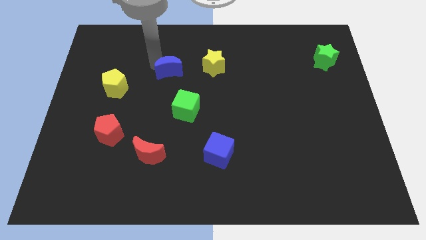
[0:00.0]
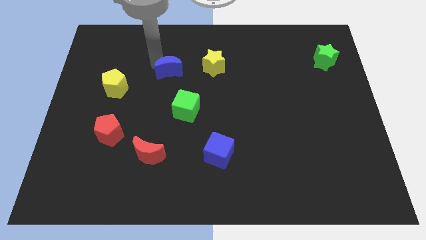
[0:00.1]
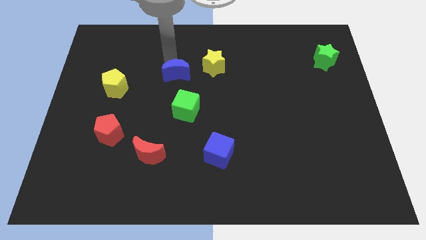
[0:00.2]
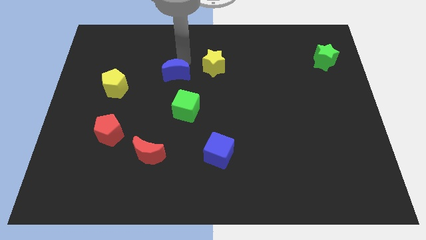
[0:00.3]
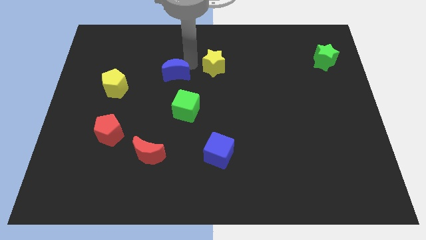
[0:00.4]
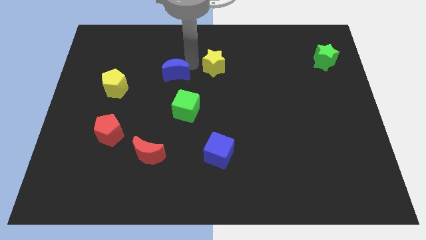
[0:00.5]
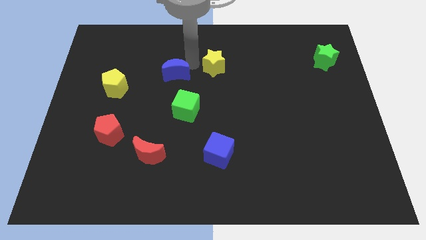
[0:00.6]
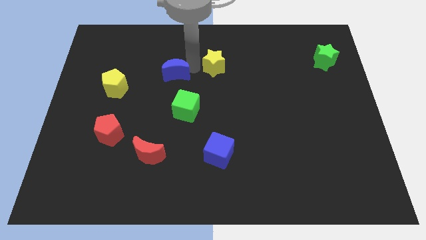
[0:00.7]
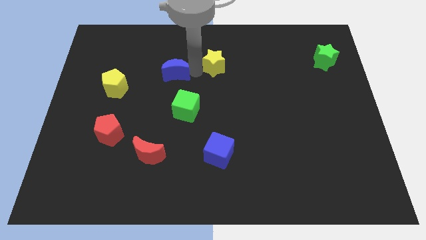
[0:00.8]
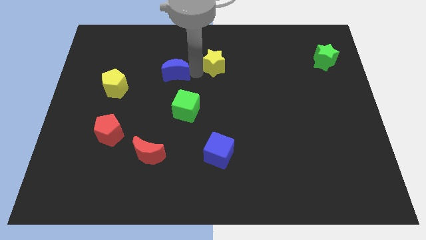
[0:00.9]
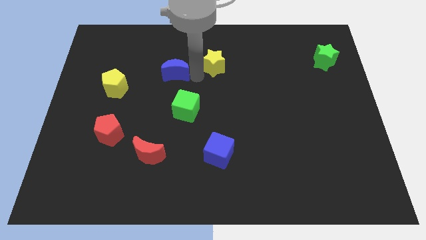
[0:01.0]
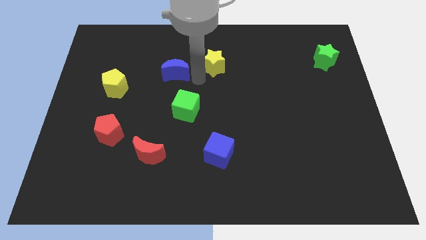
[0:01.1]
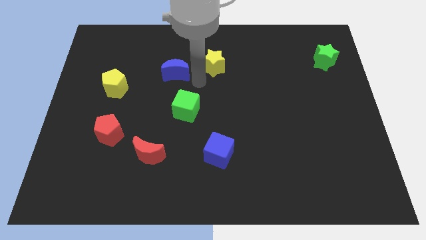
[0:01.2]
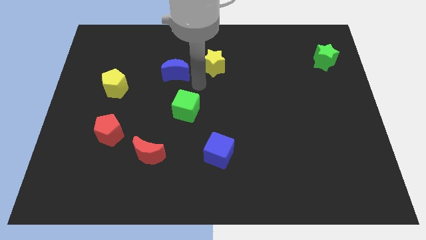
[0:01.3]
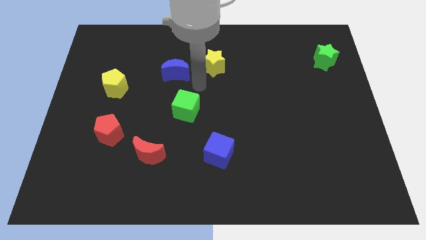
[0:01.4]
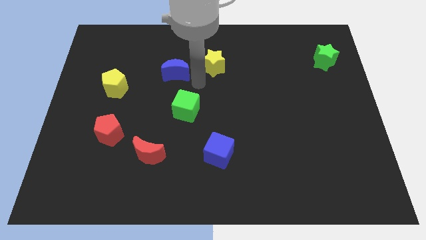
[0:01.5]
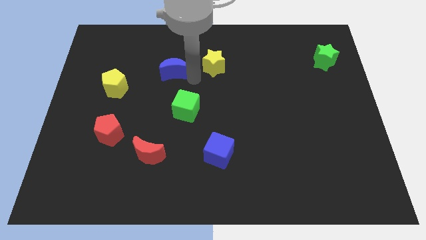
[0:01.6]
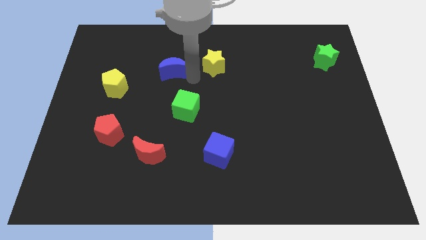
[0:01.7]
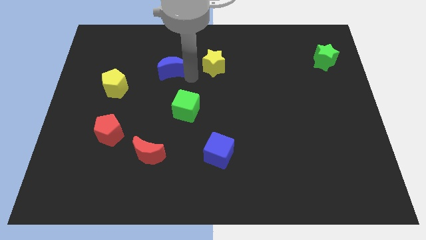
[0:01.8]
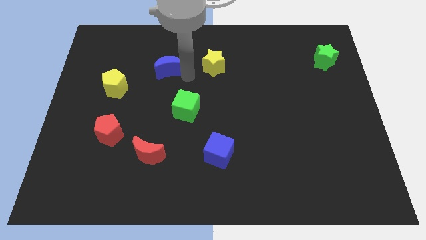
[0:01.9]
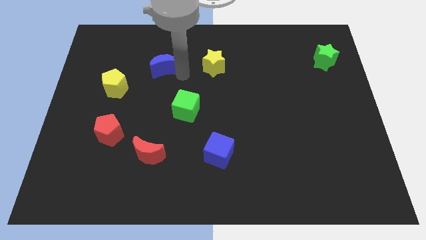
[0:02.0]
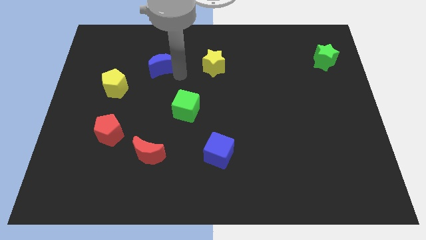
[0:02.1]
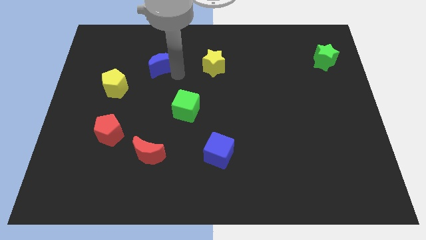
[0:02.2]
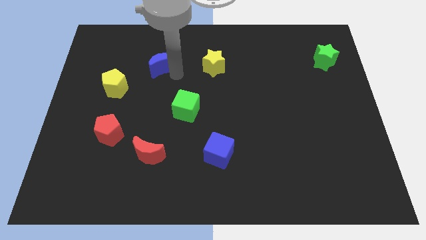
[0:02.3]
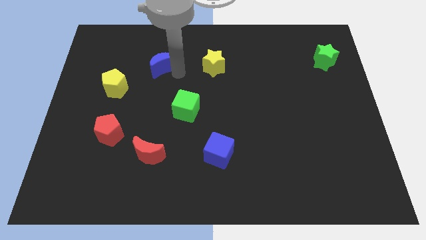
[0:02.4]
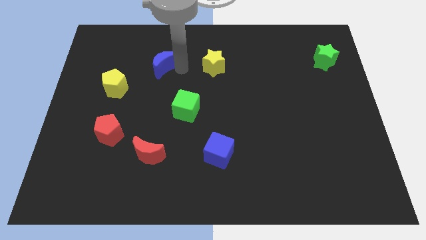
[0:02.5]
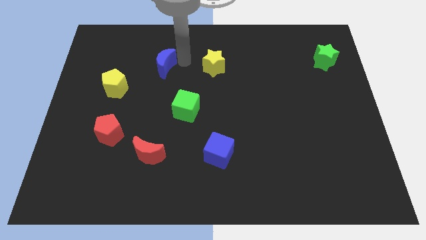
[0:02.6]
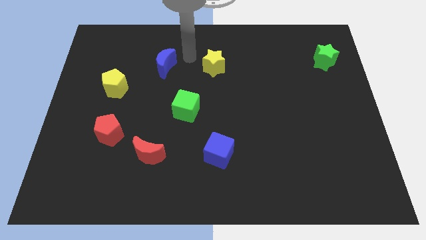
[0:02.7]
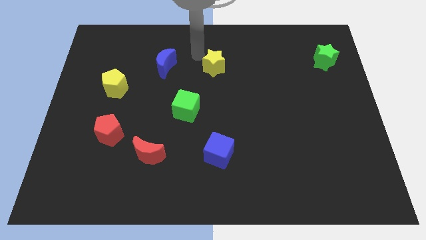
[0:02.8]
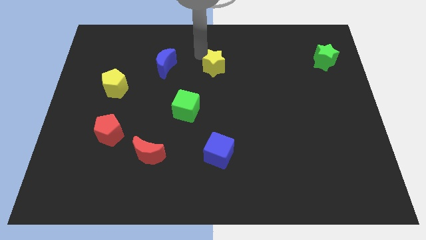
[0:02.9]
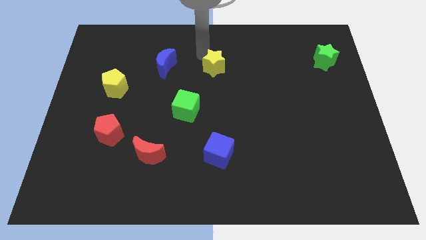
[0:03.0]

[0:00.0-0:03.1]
place the blue crescent horizontally to the left side of the yellow star

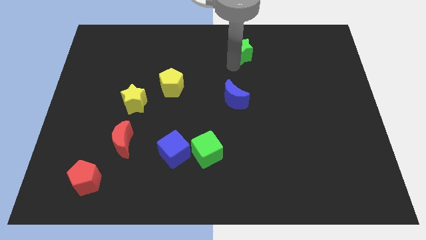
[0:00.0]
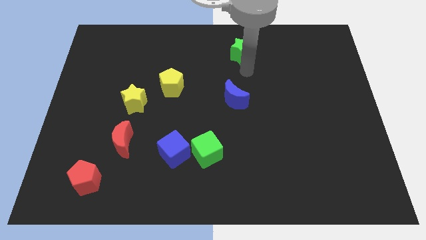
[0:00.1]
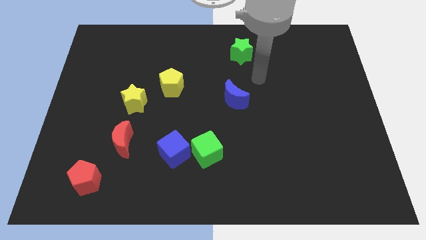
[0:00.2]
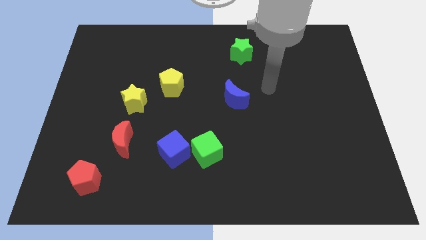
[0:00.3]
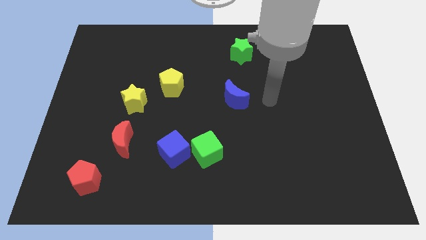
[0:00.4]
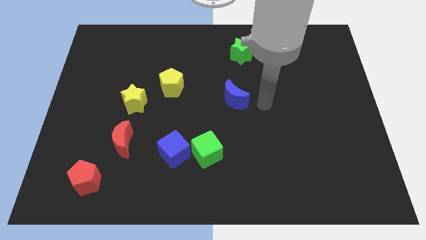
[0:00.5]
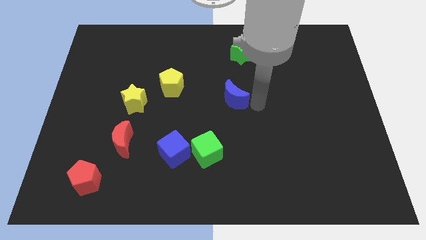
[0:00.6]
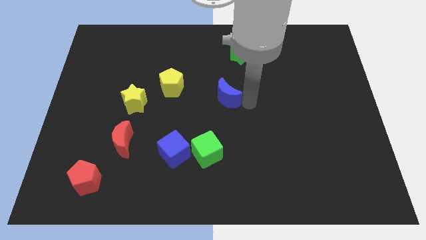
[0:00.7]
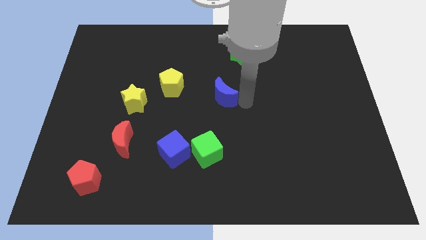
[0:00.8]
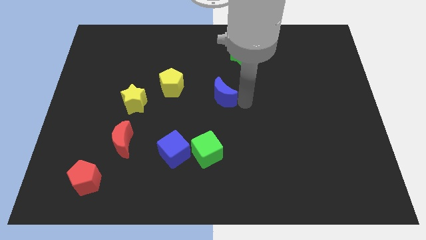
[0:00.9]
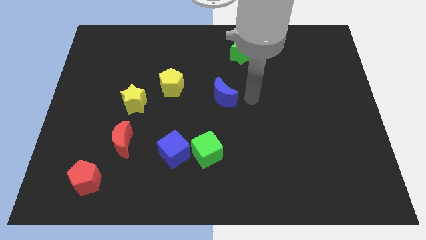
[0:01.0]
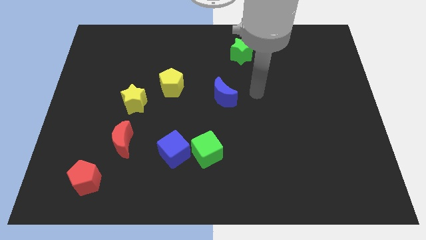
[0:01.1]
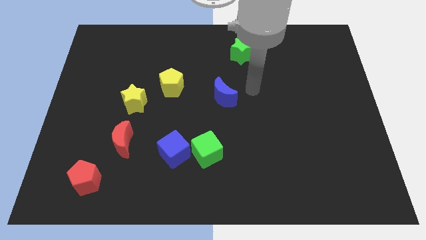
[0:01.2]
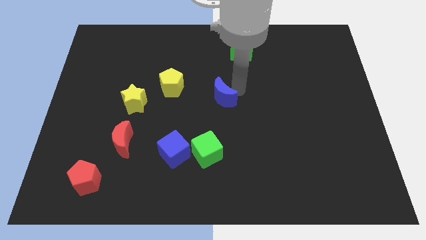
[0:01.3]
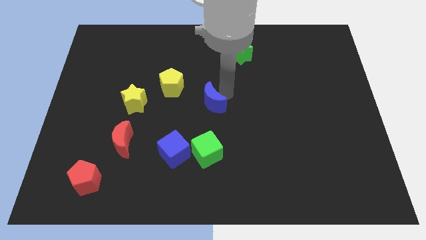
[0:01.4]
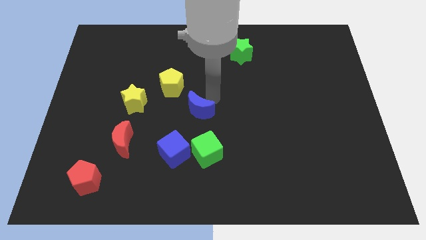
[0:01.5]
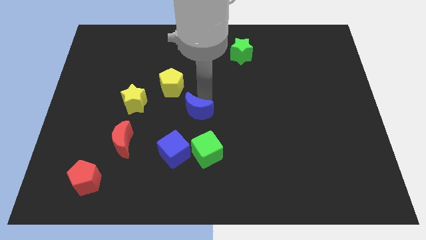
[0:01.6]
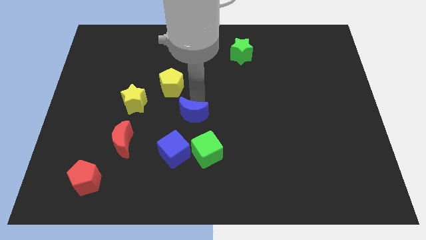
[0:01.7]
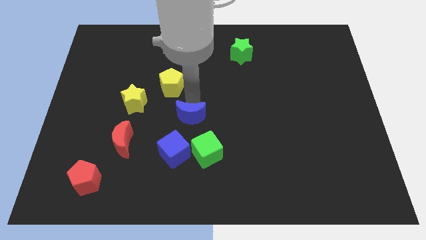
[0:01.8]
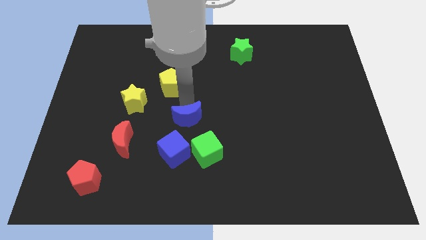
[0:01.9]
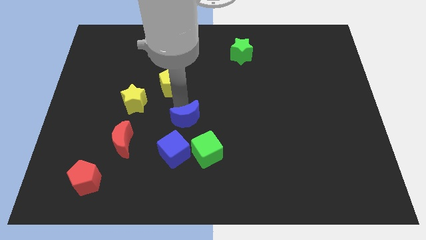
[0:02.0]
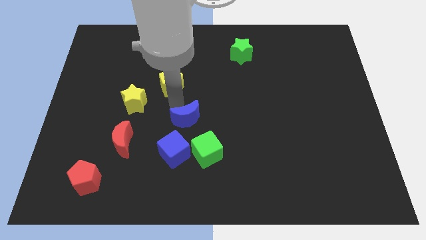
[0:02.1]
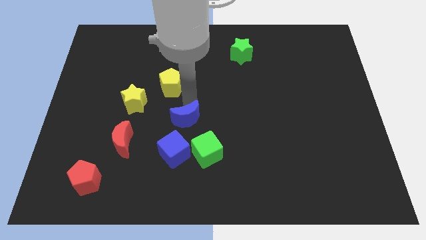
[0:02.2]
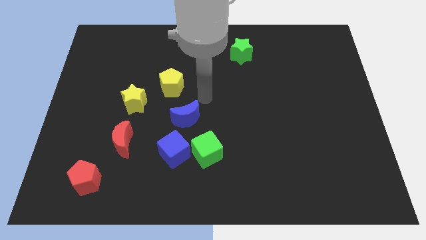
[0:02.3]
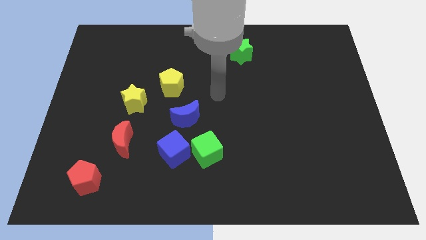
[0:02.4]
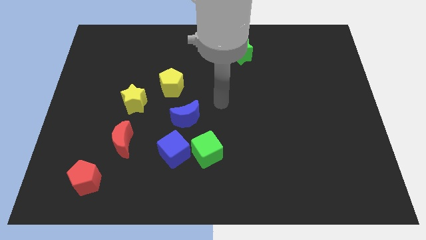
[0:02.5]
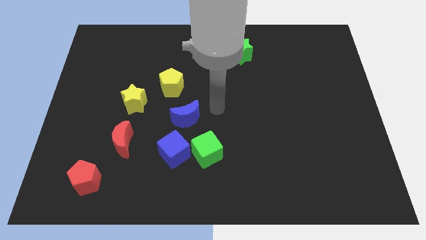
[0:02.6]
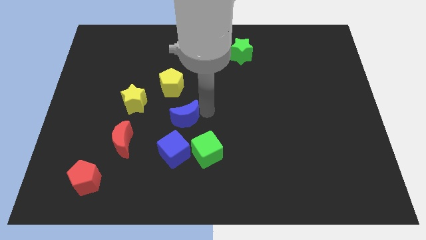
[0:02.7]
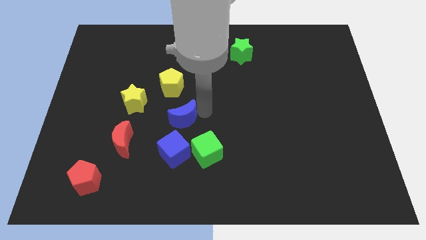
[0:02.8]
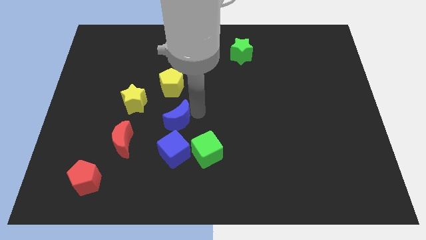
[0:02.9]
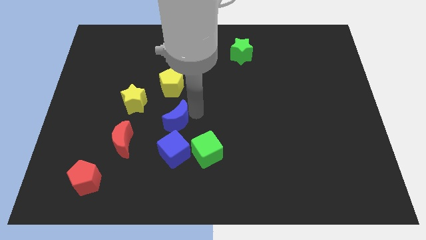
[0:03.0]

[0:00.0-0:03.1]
push blue moon in between yellow pentagon and blue cube

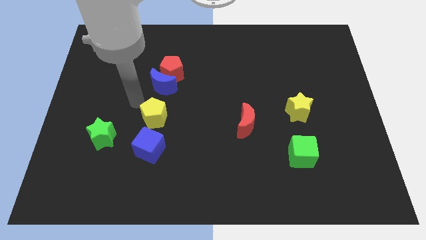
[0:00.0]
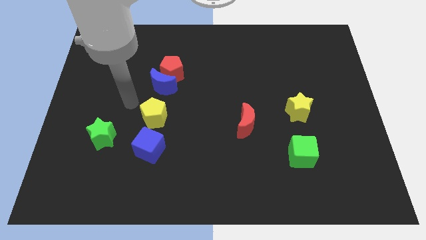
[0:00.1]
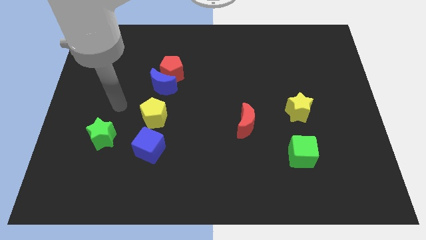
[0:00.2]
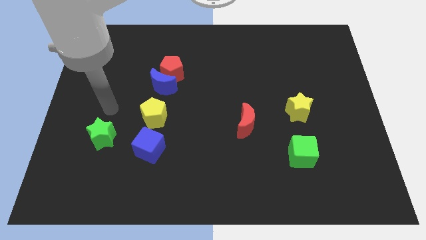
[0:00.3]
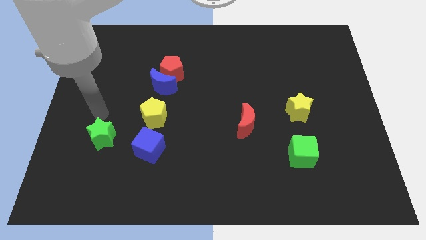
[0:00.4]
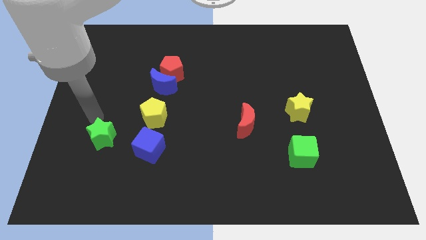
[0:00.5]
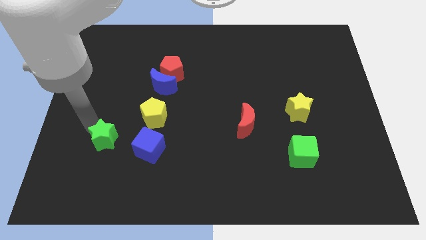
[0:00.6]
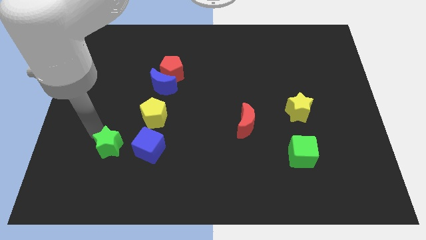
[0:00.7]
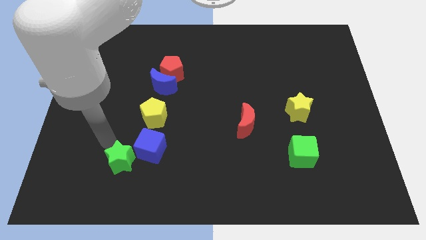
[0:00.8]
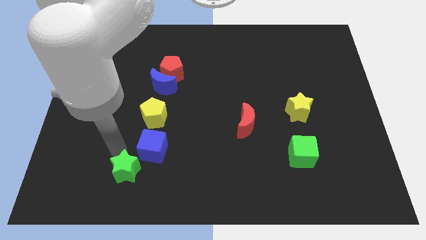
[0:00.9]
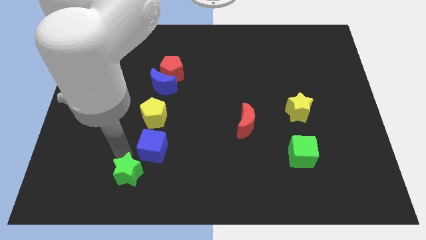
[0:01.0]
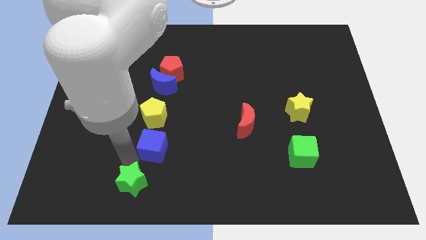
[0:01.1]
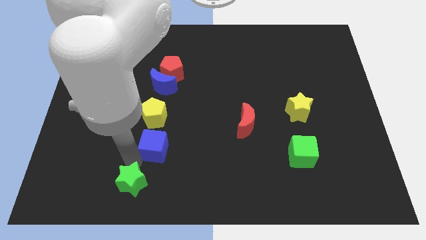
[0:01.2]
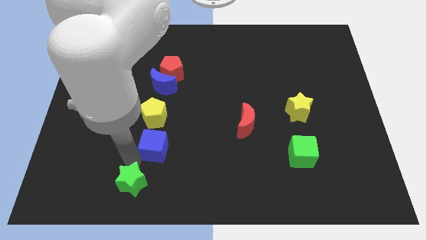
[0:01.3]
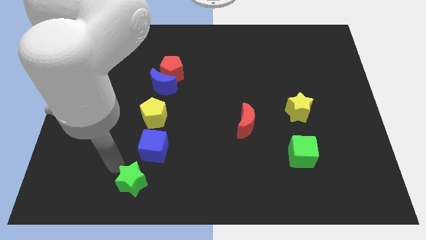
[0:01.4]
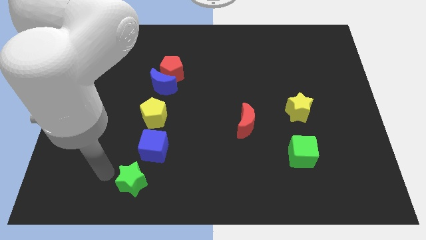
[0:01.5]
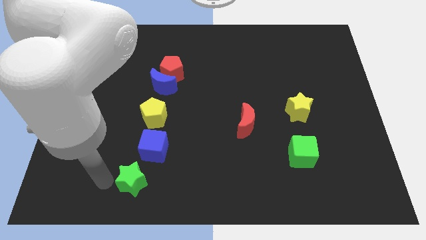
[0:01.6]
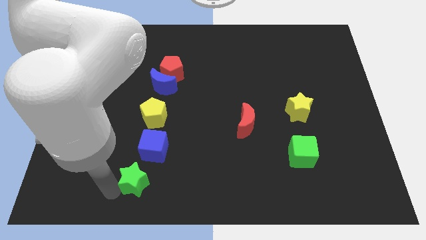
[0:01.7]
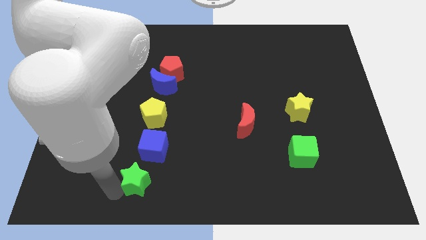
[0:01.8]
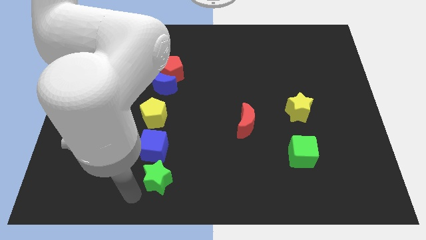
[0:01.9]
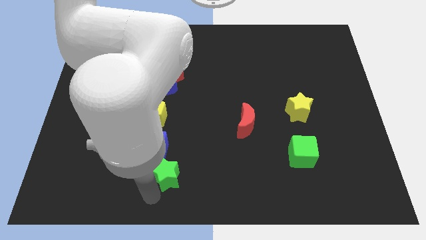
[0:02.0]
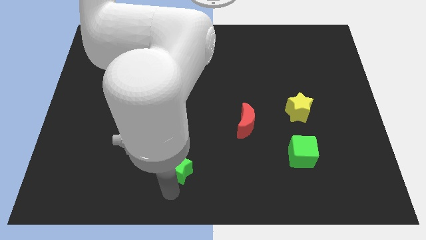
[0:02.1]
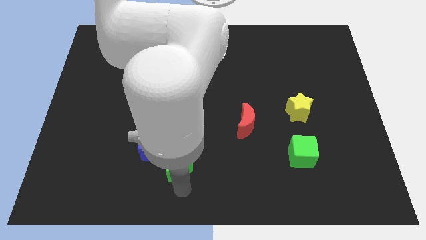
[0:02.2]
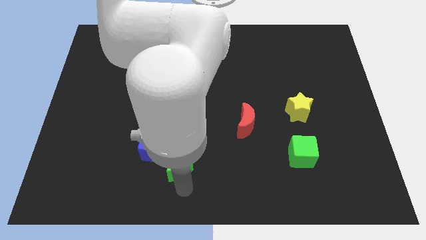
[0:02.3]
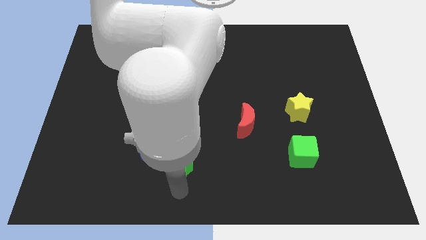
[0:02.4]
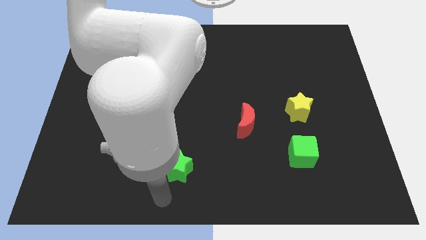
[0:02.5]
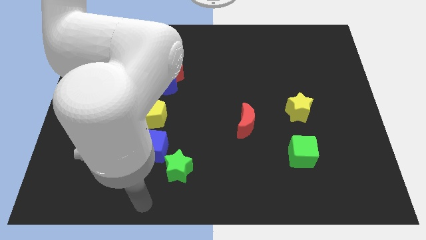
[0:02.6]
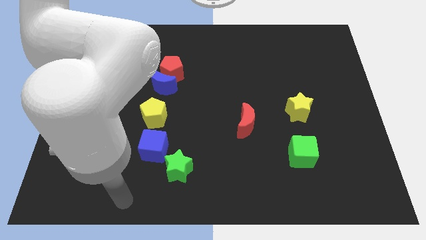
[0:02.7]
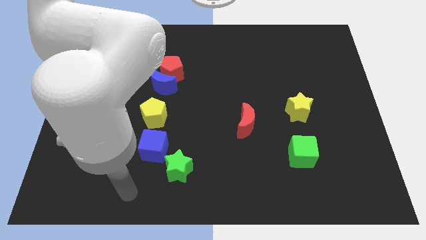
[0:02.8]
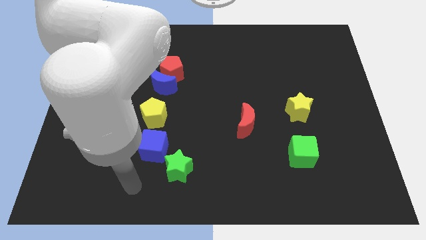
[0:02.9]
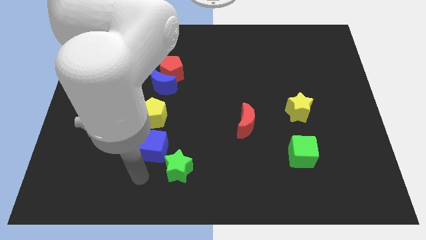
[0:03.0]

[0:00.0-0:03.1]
move the green star diagonally to the red crescent
